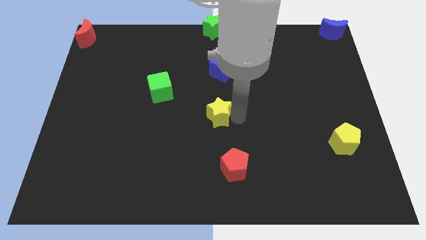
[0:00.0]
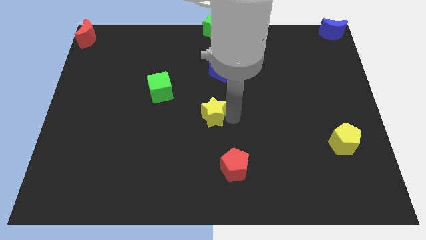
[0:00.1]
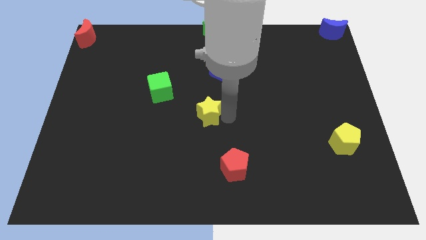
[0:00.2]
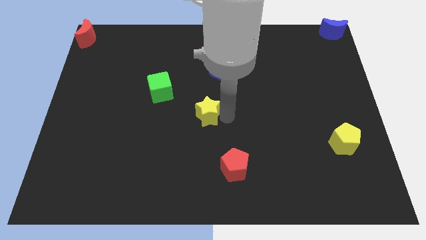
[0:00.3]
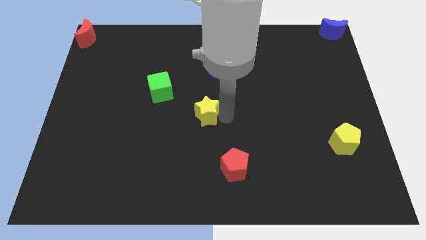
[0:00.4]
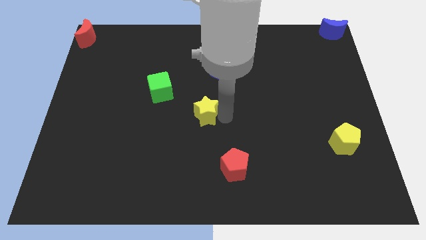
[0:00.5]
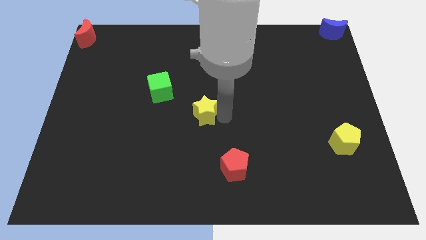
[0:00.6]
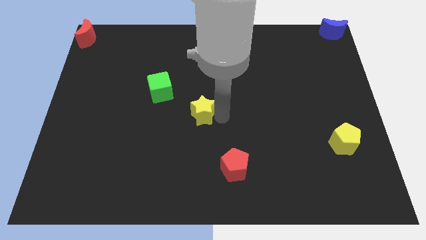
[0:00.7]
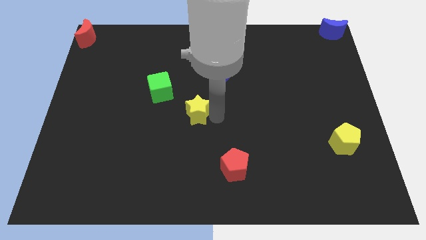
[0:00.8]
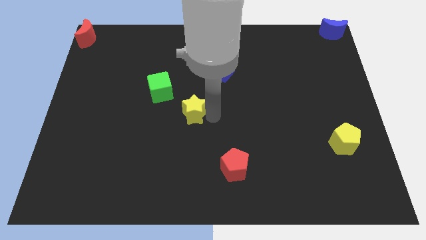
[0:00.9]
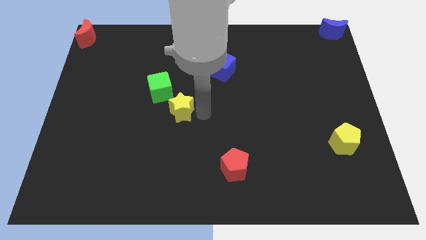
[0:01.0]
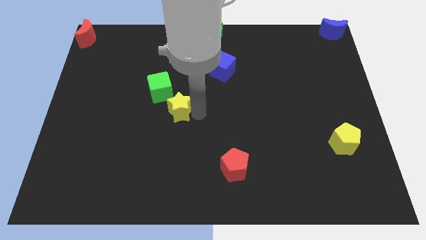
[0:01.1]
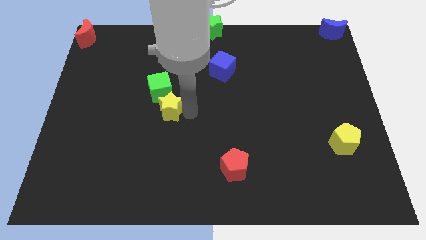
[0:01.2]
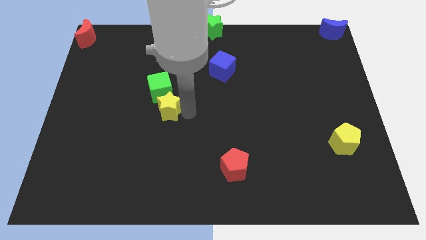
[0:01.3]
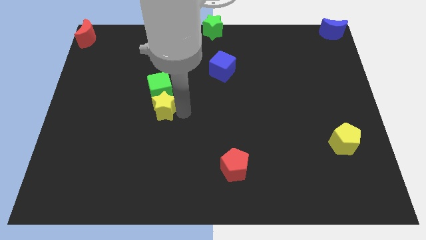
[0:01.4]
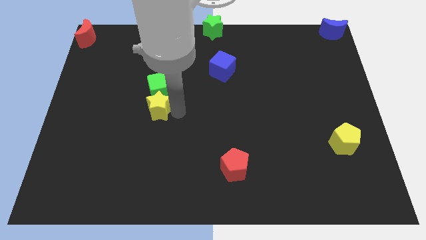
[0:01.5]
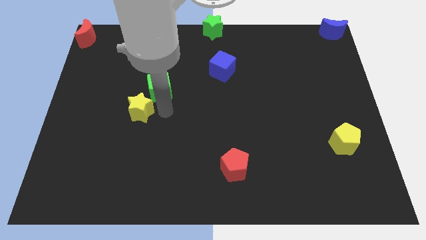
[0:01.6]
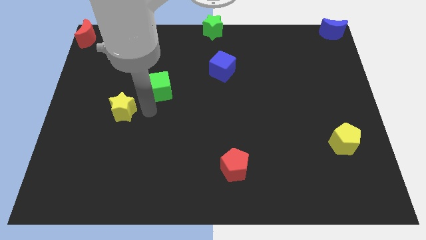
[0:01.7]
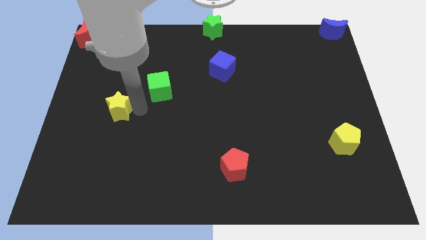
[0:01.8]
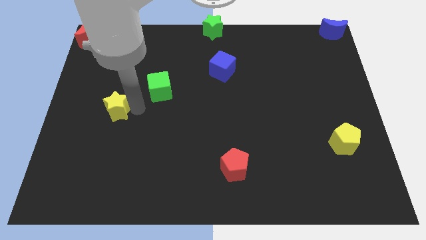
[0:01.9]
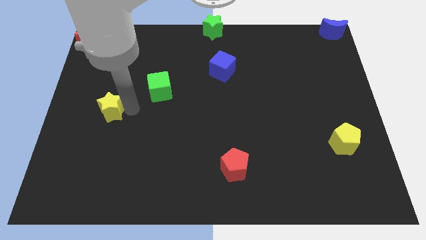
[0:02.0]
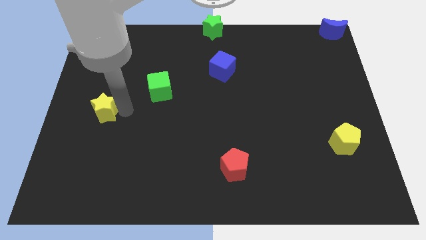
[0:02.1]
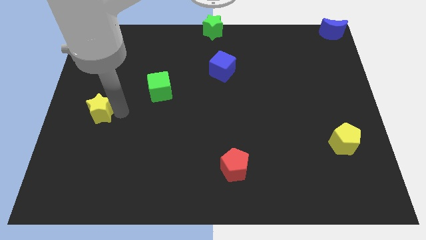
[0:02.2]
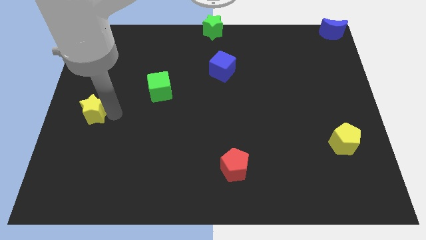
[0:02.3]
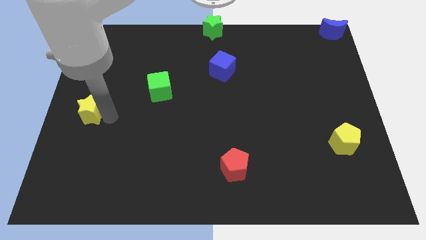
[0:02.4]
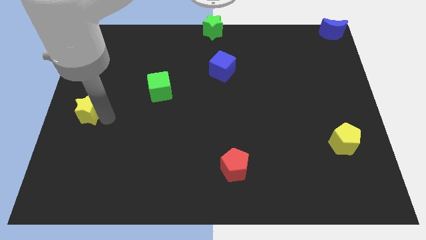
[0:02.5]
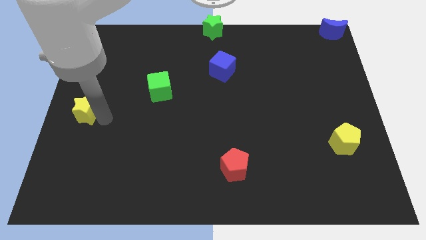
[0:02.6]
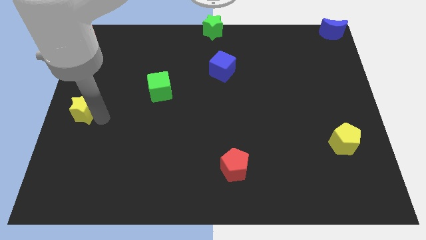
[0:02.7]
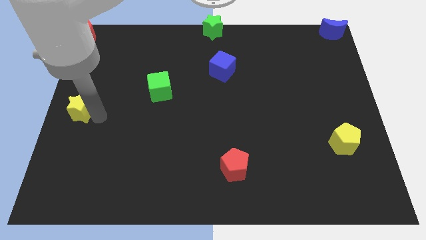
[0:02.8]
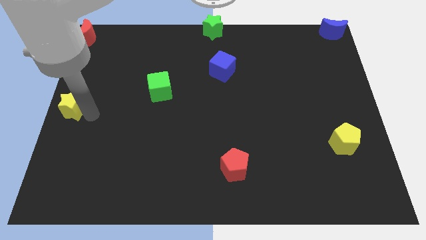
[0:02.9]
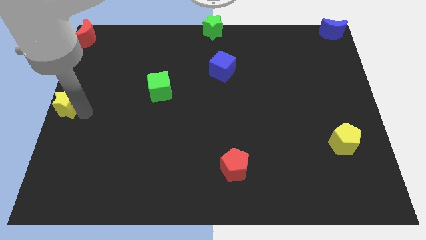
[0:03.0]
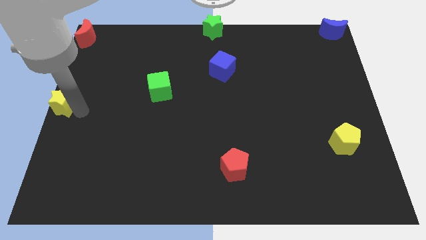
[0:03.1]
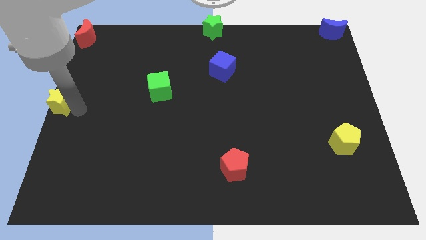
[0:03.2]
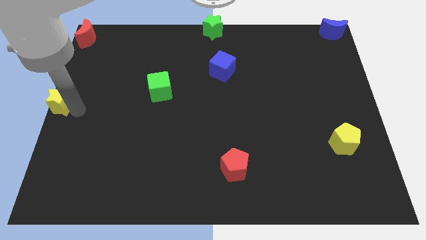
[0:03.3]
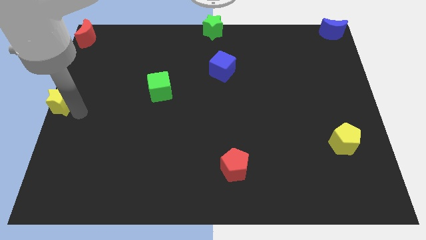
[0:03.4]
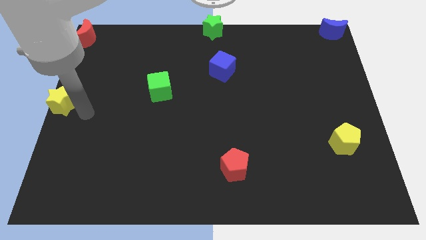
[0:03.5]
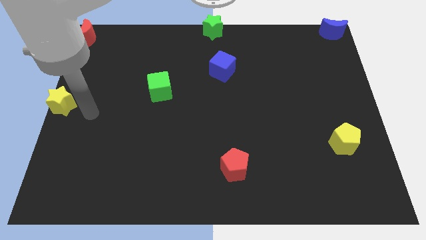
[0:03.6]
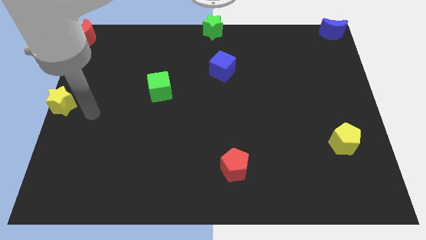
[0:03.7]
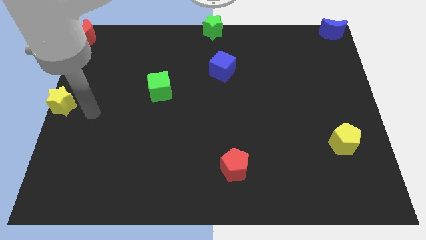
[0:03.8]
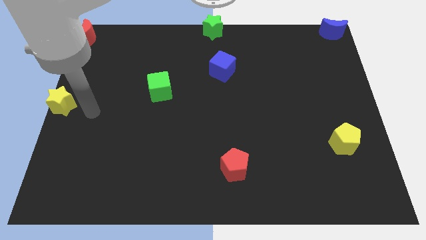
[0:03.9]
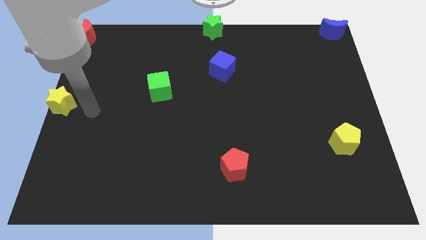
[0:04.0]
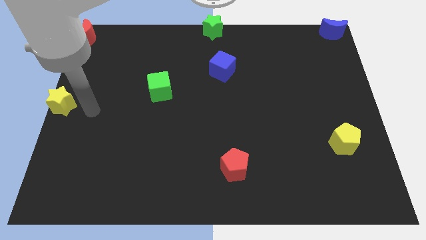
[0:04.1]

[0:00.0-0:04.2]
slide the yellow star to the center left corner of the board

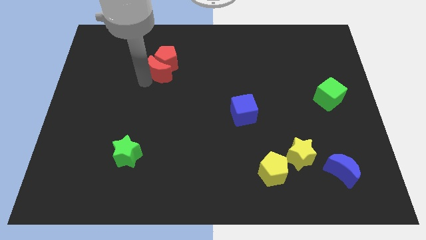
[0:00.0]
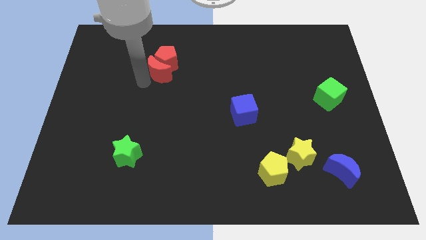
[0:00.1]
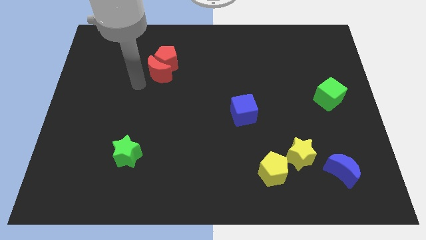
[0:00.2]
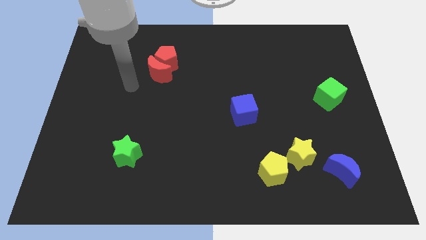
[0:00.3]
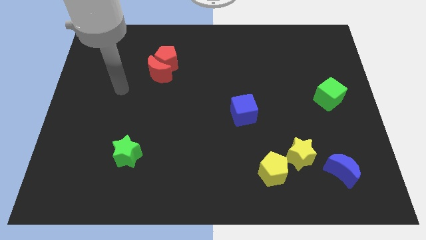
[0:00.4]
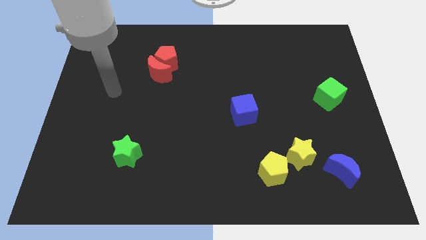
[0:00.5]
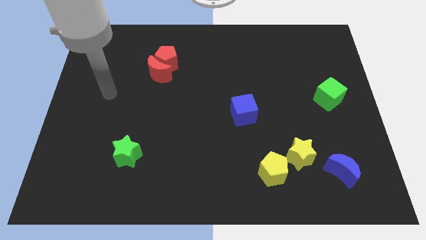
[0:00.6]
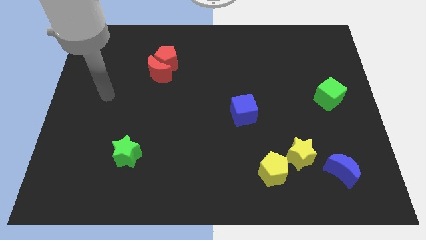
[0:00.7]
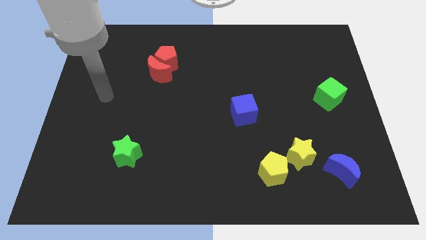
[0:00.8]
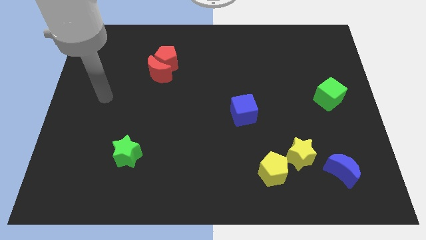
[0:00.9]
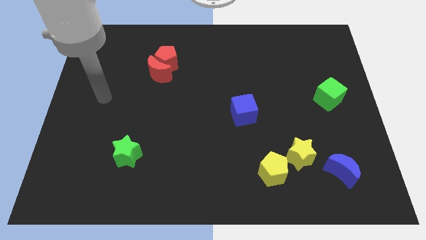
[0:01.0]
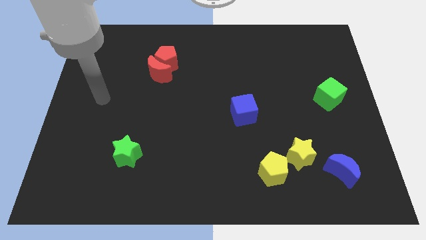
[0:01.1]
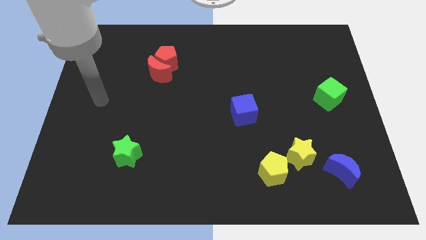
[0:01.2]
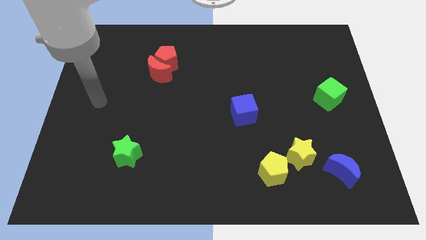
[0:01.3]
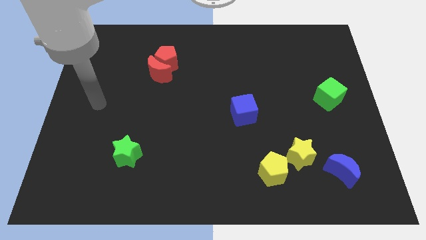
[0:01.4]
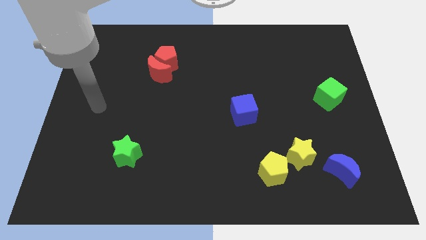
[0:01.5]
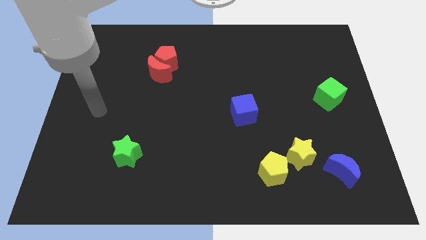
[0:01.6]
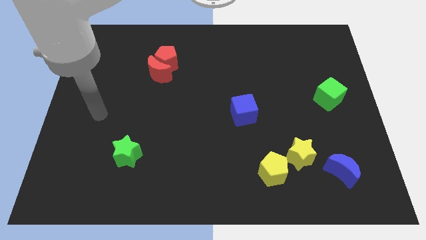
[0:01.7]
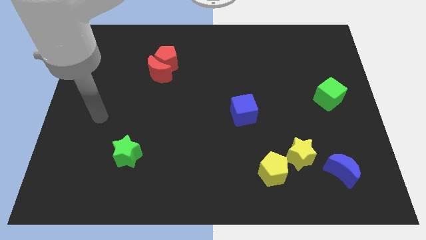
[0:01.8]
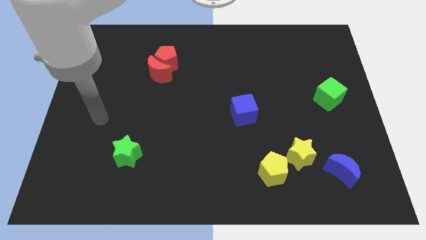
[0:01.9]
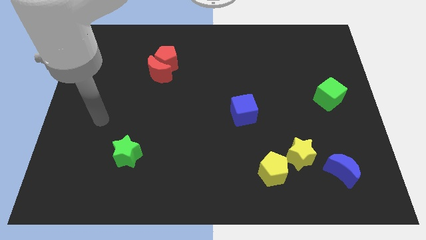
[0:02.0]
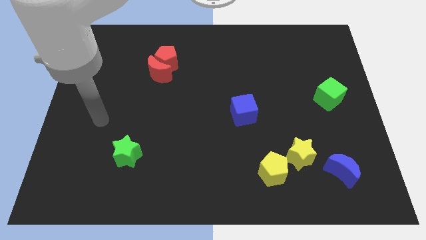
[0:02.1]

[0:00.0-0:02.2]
move your arm away from the red moon

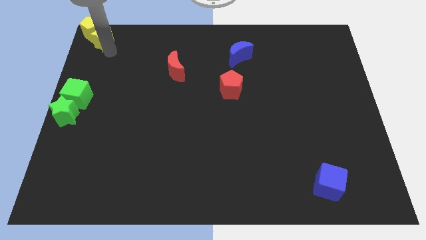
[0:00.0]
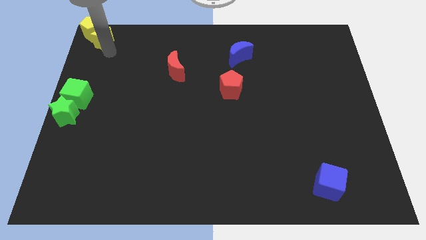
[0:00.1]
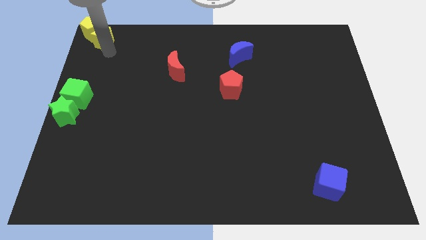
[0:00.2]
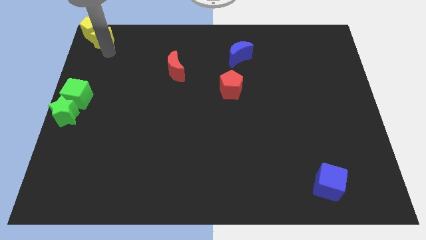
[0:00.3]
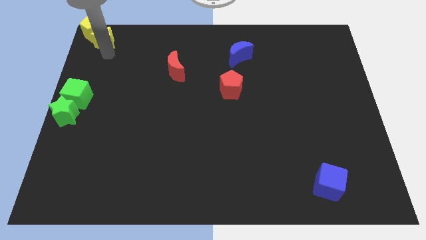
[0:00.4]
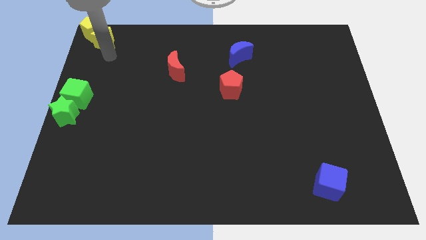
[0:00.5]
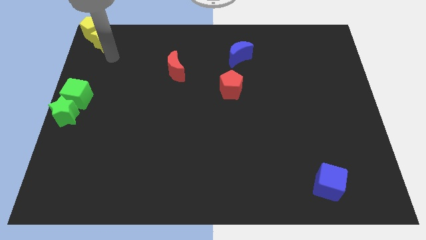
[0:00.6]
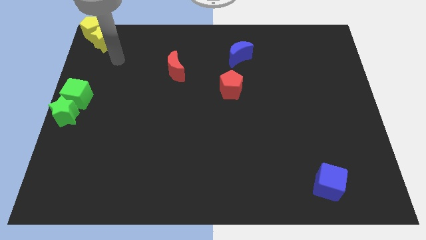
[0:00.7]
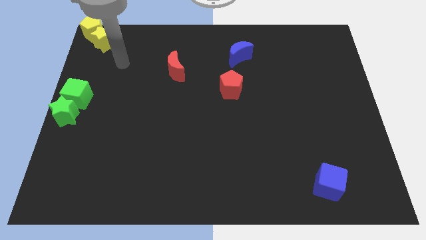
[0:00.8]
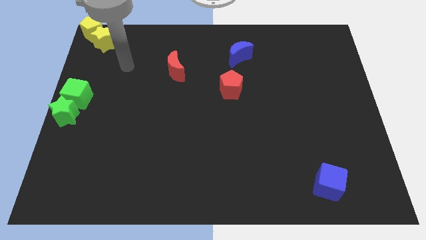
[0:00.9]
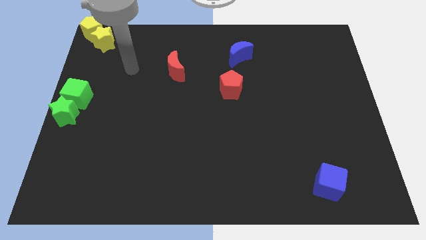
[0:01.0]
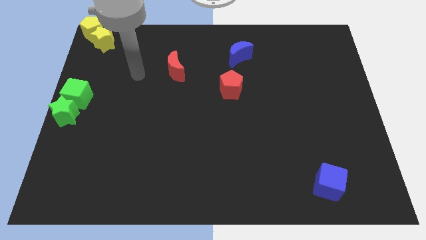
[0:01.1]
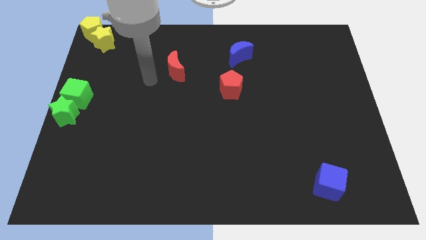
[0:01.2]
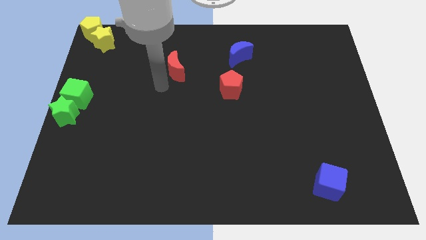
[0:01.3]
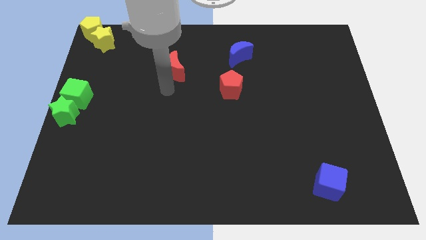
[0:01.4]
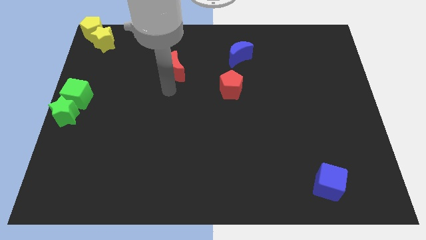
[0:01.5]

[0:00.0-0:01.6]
go away from the yellow pentagon

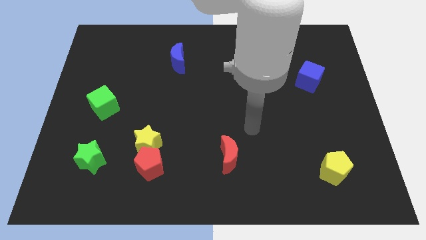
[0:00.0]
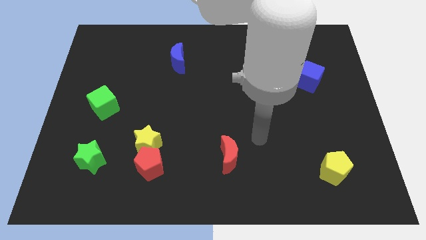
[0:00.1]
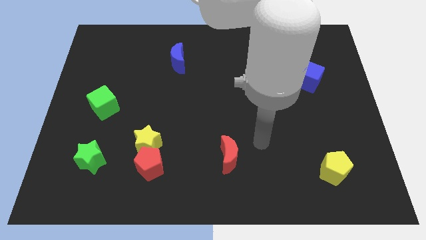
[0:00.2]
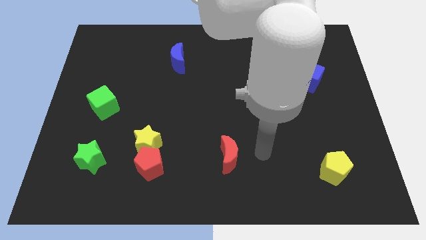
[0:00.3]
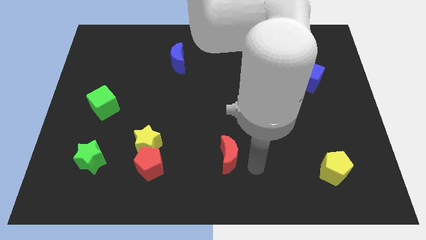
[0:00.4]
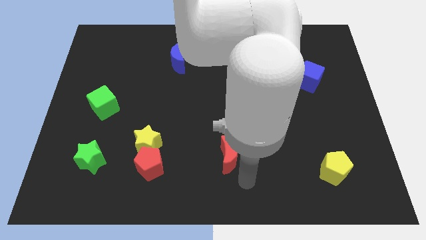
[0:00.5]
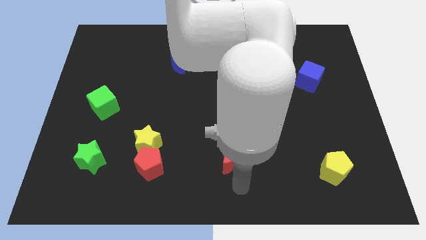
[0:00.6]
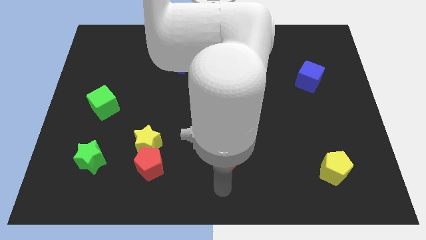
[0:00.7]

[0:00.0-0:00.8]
place arm below red moon

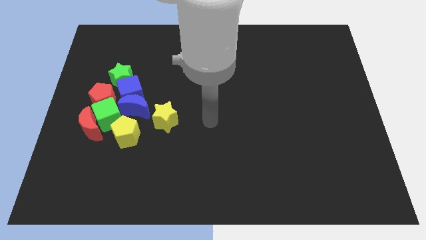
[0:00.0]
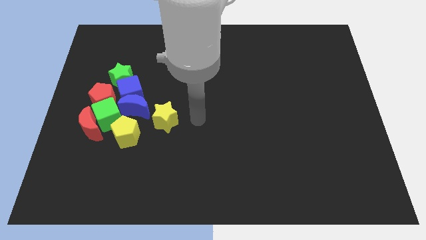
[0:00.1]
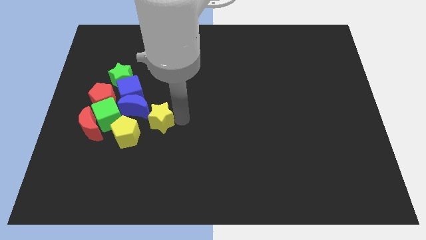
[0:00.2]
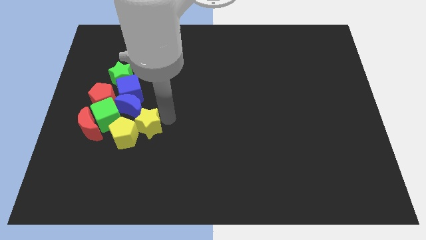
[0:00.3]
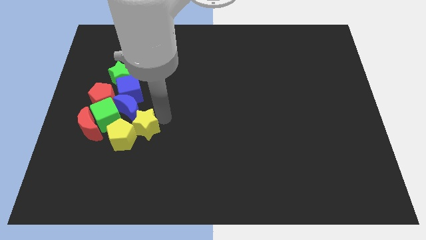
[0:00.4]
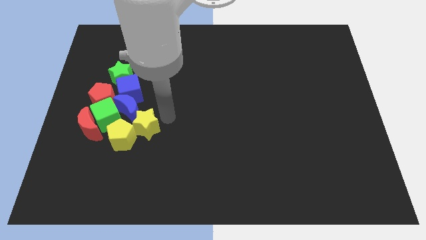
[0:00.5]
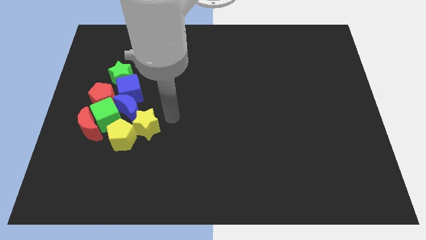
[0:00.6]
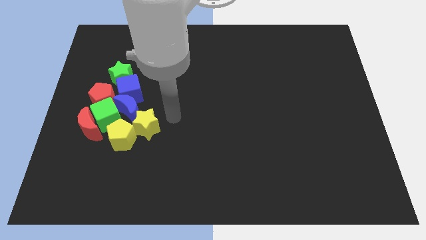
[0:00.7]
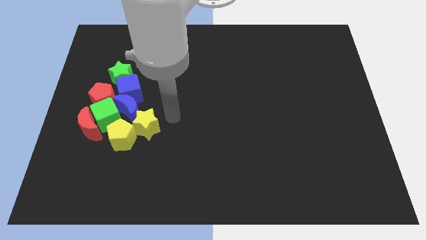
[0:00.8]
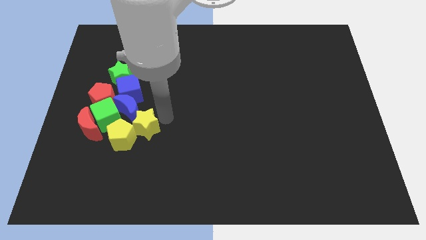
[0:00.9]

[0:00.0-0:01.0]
push yellow star into yellow pentagon
